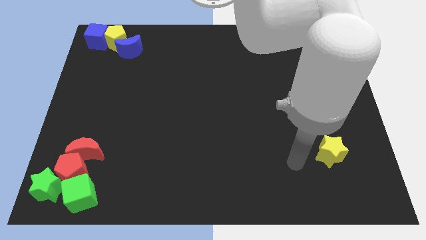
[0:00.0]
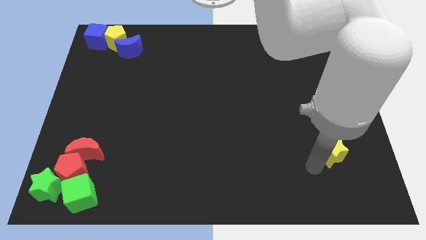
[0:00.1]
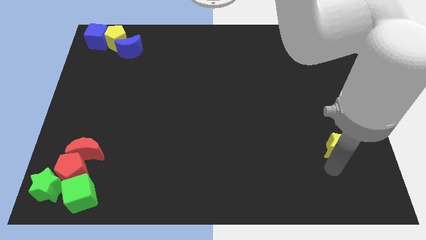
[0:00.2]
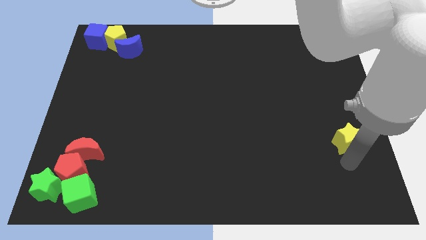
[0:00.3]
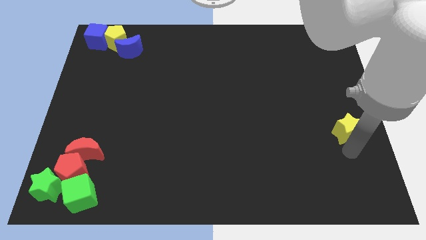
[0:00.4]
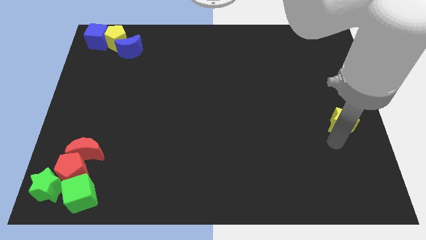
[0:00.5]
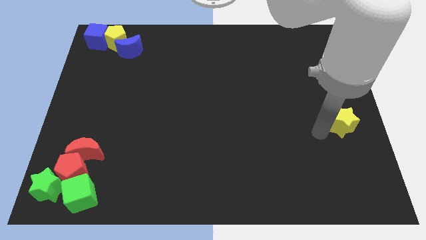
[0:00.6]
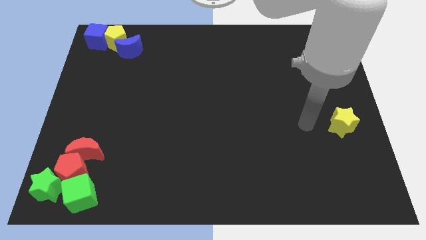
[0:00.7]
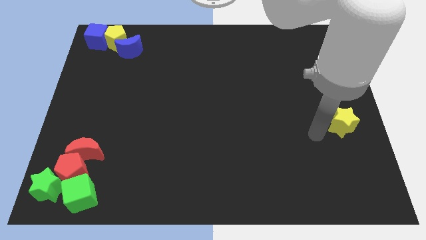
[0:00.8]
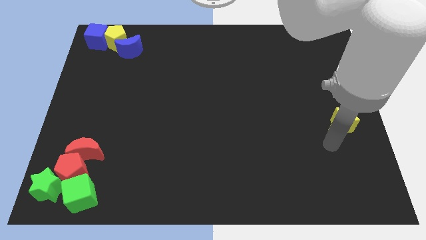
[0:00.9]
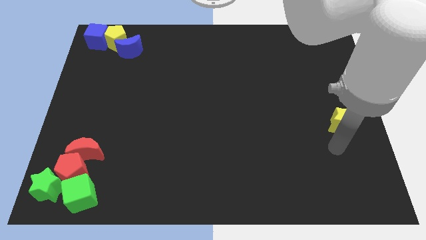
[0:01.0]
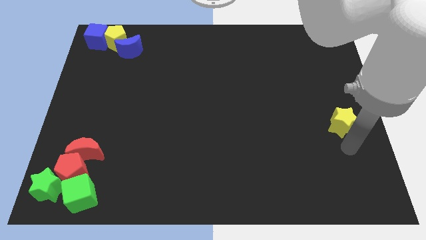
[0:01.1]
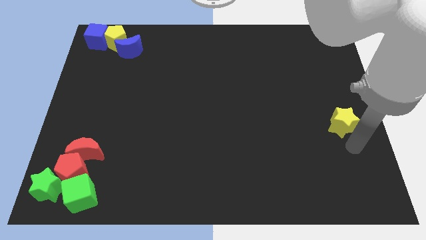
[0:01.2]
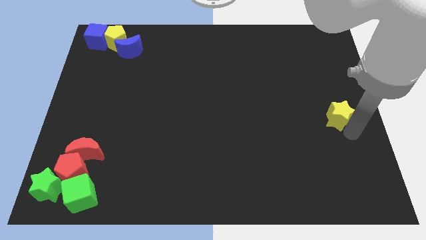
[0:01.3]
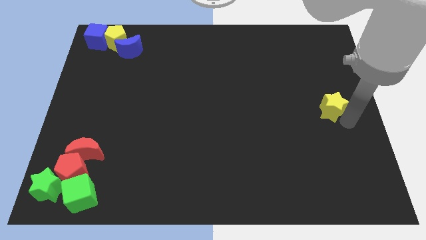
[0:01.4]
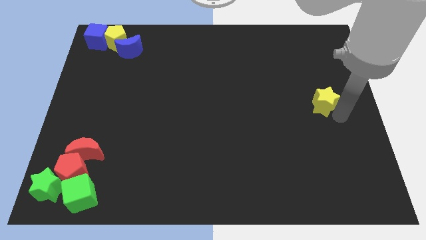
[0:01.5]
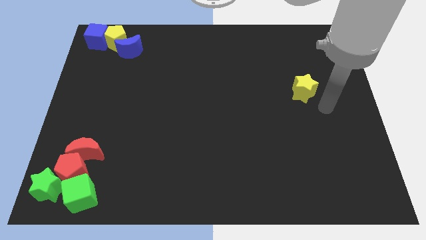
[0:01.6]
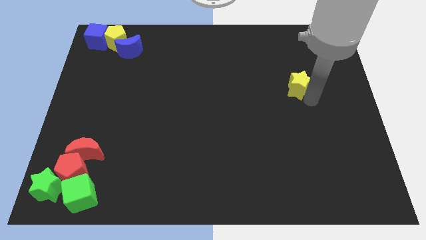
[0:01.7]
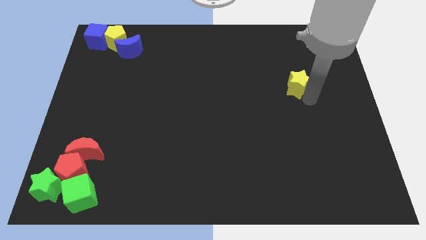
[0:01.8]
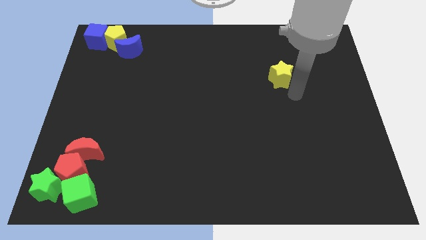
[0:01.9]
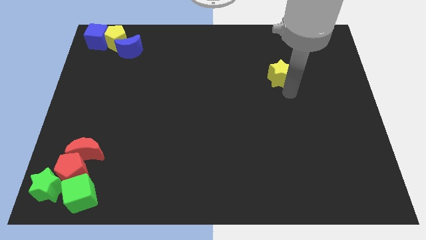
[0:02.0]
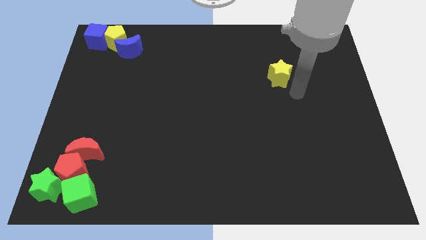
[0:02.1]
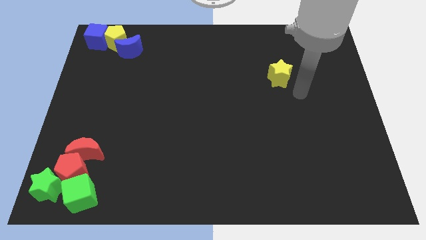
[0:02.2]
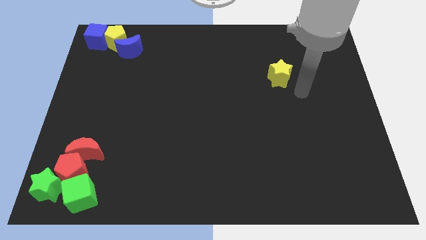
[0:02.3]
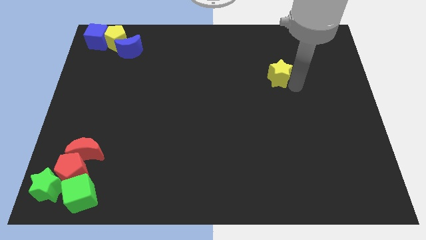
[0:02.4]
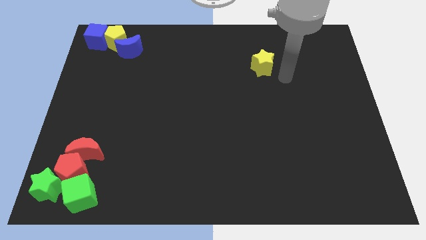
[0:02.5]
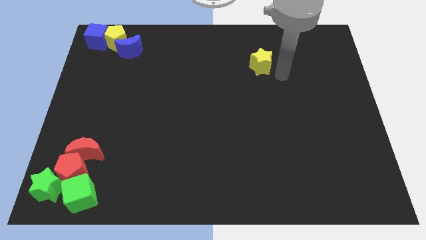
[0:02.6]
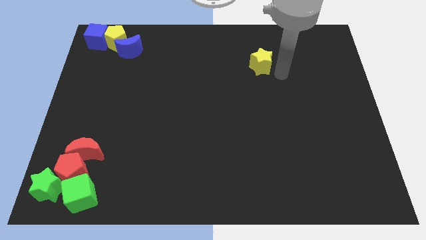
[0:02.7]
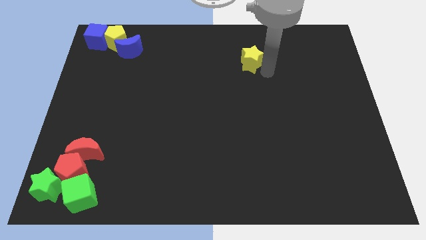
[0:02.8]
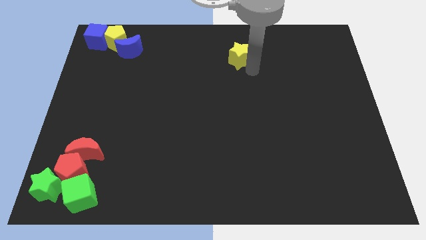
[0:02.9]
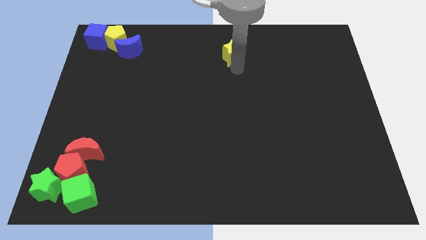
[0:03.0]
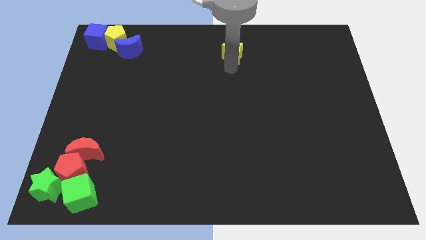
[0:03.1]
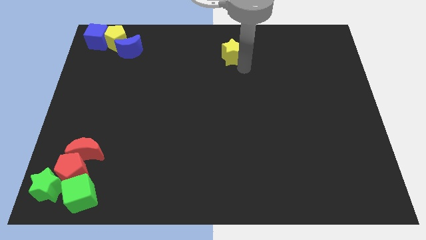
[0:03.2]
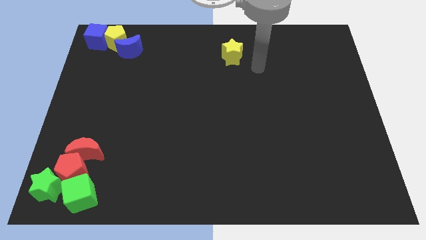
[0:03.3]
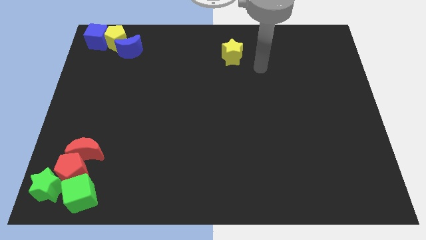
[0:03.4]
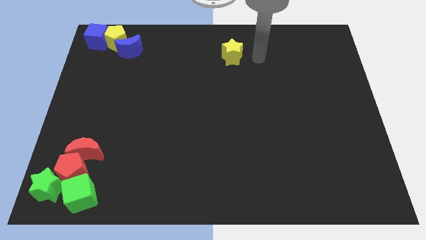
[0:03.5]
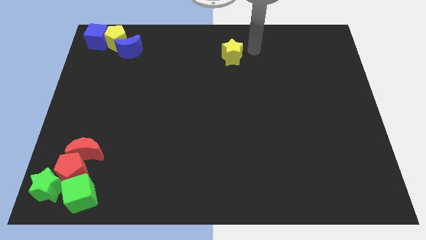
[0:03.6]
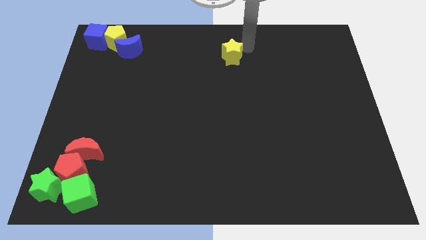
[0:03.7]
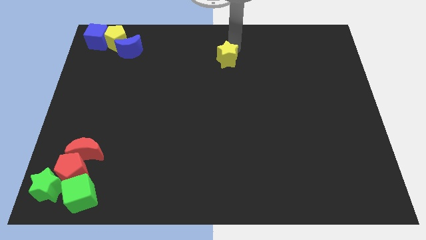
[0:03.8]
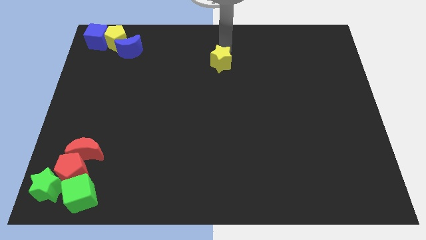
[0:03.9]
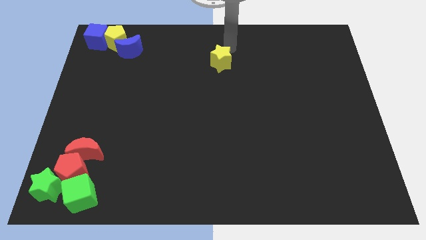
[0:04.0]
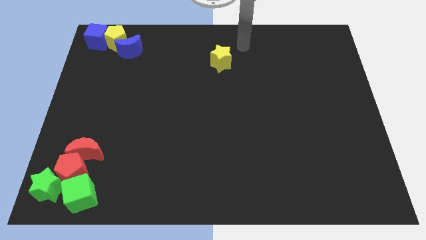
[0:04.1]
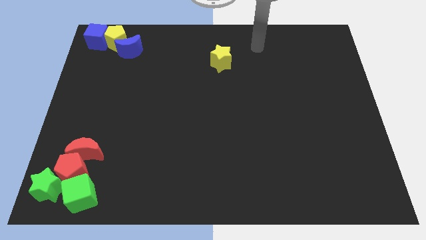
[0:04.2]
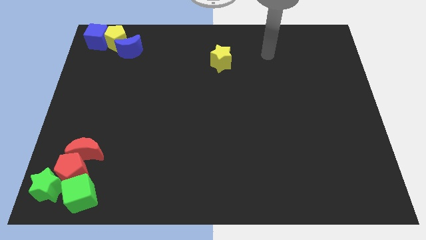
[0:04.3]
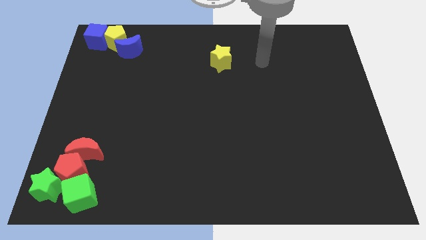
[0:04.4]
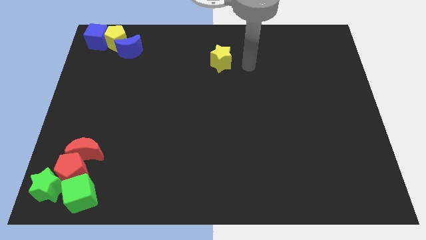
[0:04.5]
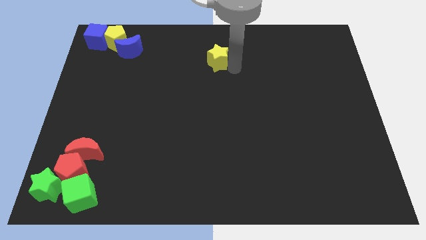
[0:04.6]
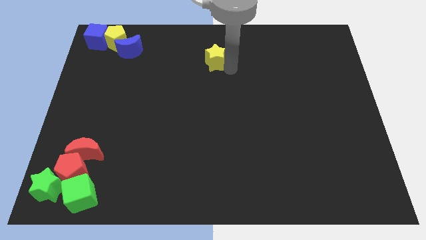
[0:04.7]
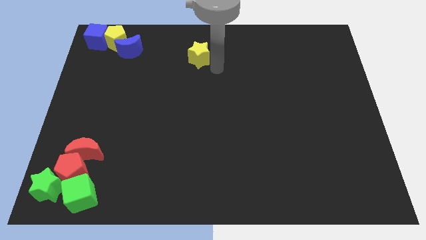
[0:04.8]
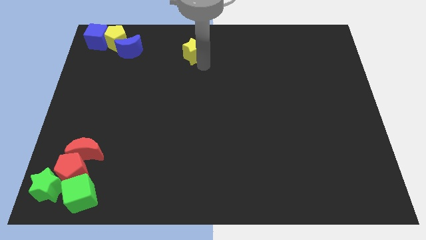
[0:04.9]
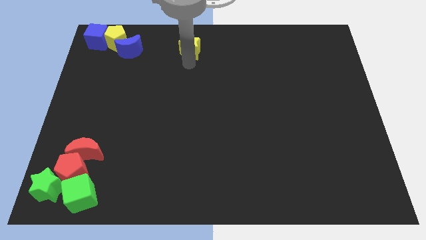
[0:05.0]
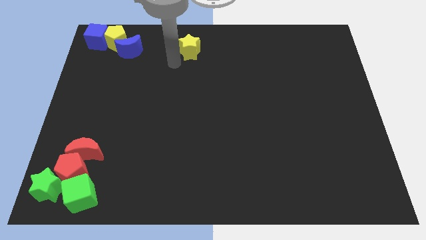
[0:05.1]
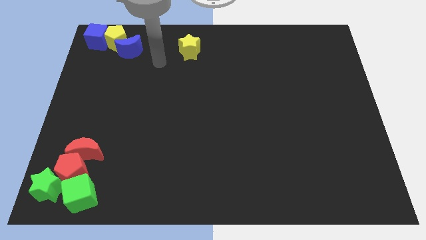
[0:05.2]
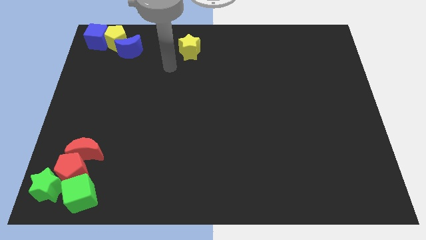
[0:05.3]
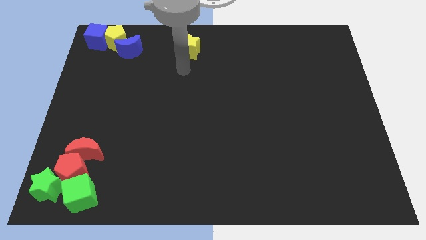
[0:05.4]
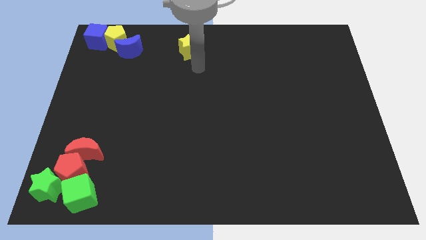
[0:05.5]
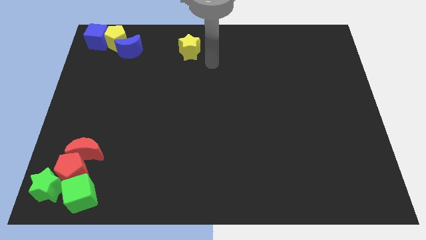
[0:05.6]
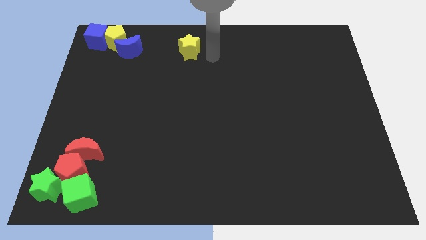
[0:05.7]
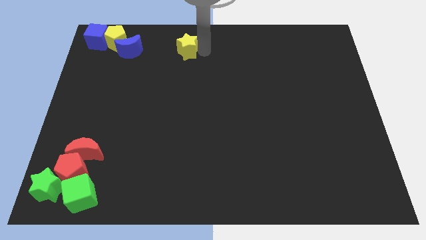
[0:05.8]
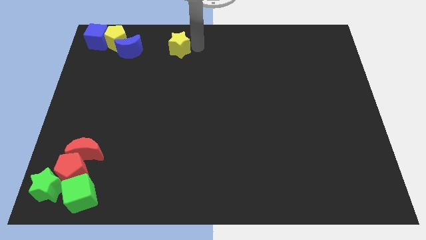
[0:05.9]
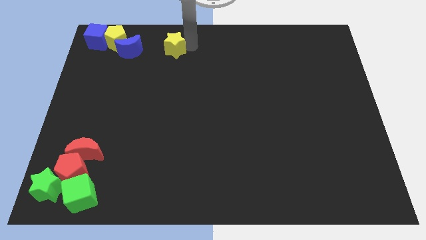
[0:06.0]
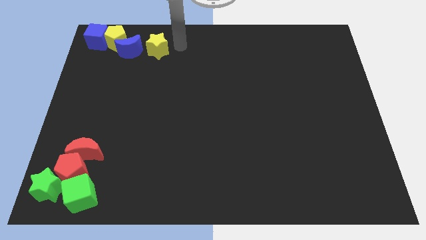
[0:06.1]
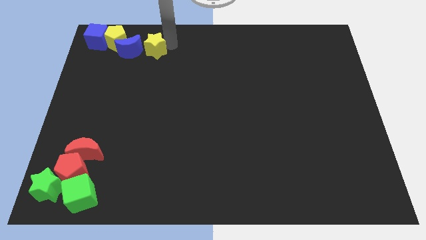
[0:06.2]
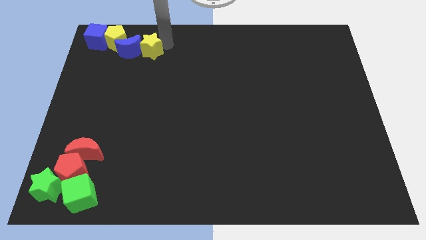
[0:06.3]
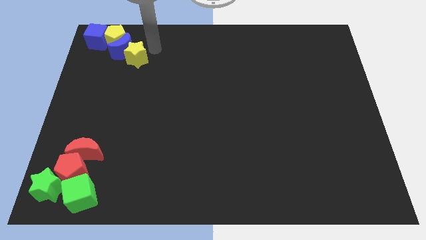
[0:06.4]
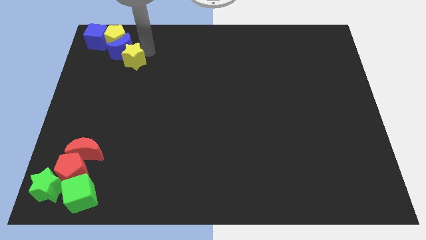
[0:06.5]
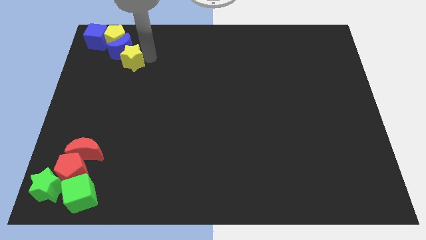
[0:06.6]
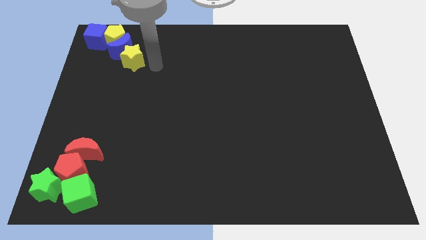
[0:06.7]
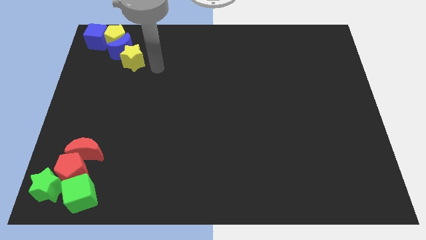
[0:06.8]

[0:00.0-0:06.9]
move the yellow star below the blue crescent

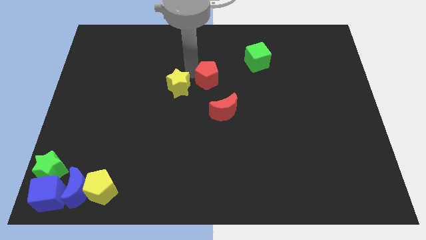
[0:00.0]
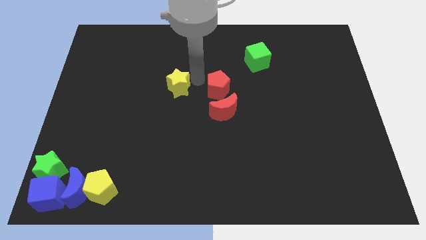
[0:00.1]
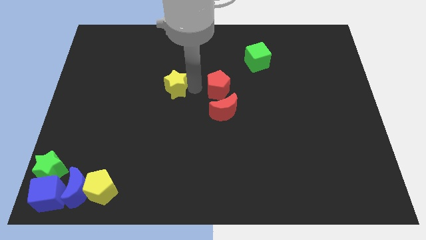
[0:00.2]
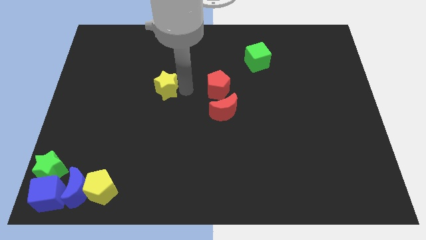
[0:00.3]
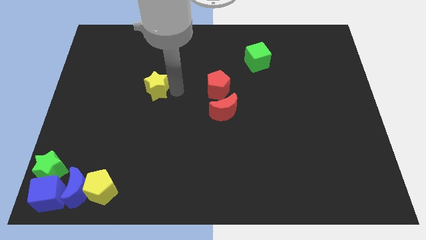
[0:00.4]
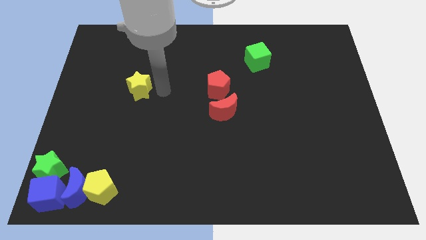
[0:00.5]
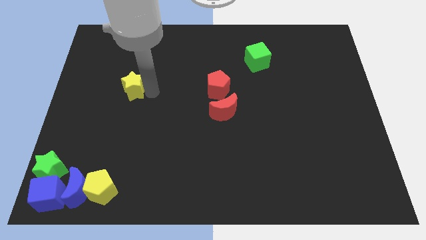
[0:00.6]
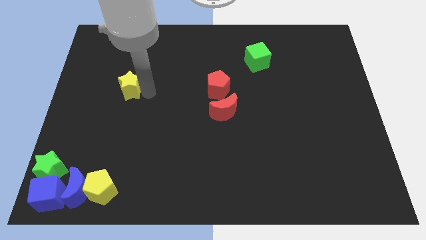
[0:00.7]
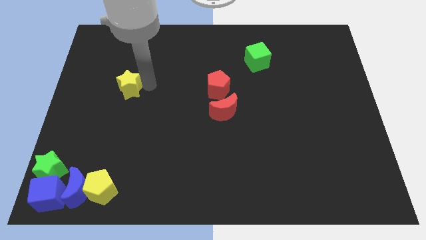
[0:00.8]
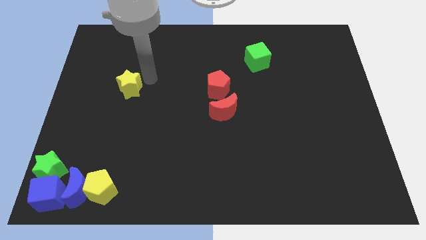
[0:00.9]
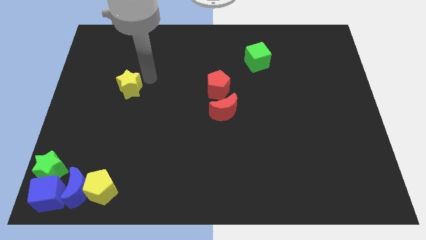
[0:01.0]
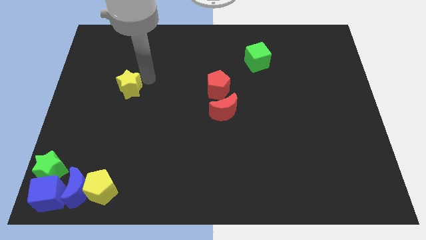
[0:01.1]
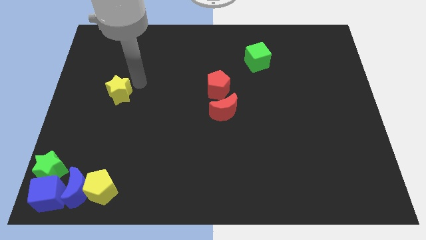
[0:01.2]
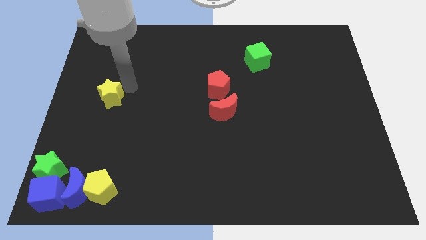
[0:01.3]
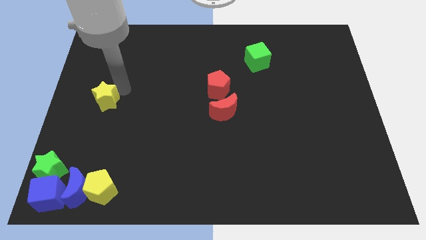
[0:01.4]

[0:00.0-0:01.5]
place yellow star above yellow pentagon

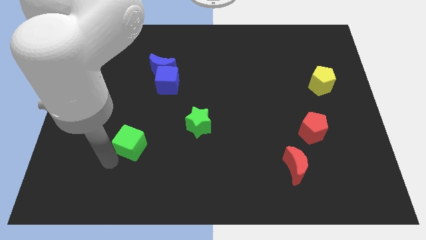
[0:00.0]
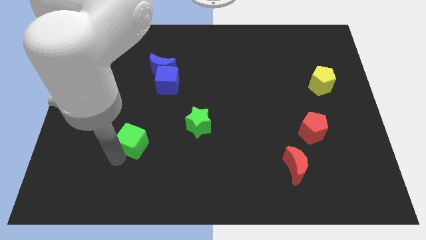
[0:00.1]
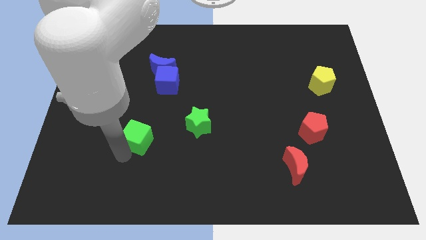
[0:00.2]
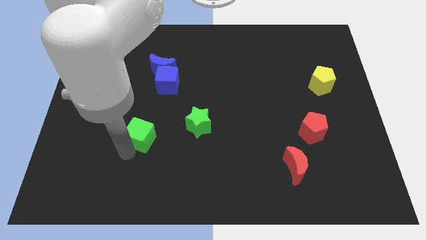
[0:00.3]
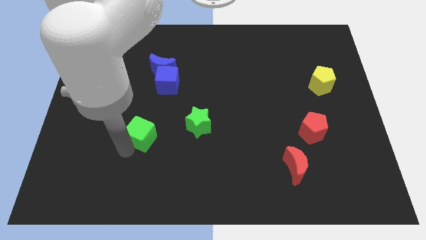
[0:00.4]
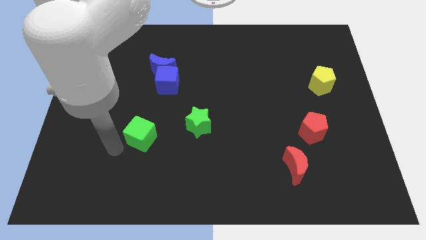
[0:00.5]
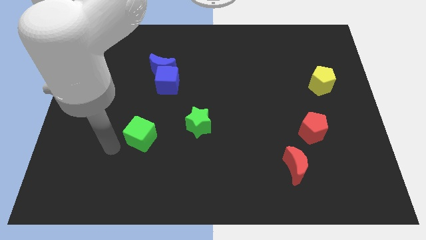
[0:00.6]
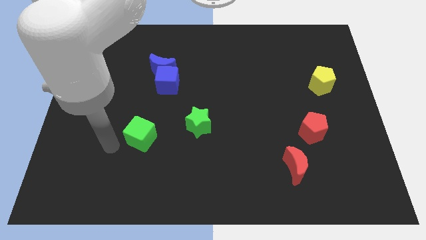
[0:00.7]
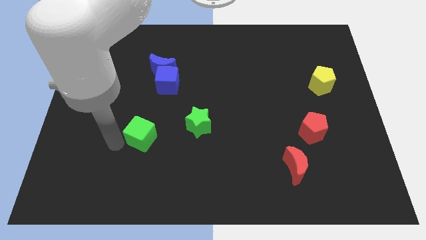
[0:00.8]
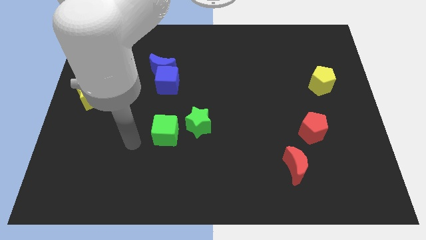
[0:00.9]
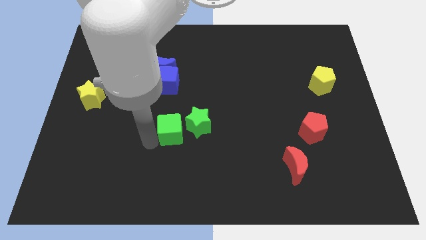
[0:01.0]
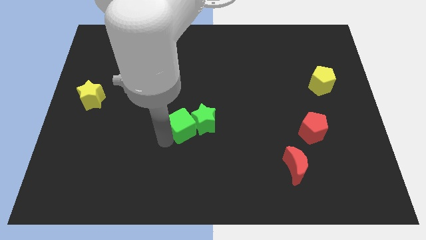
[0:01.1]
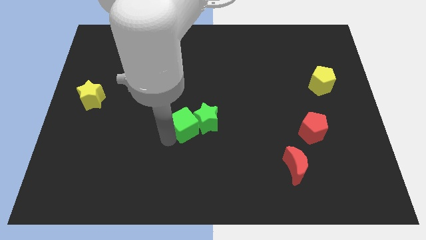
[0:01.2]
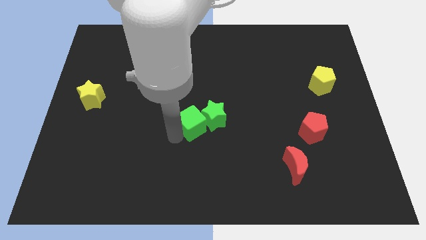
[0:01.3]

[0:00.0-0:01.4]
push the green cube close to the green star
